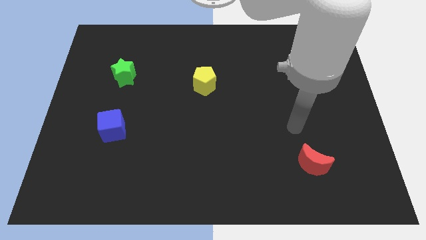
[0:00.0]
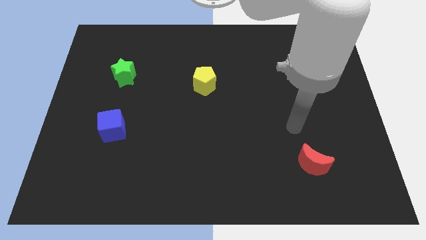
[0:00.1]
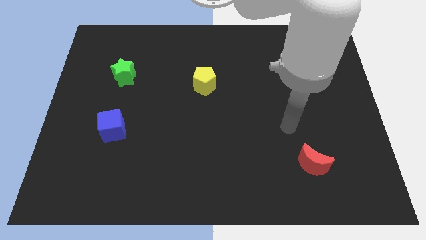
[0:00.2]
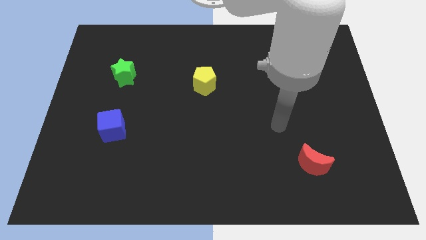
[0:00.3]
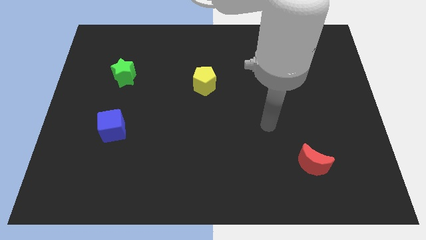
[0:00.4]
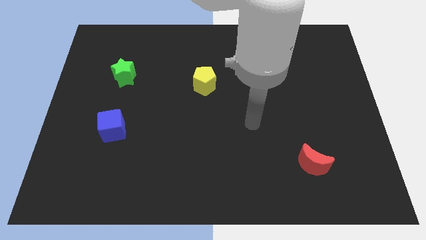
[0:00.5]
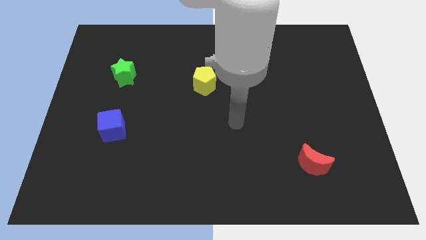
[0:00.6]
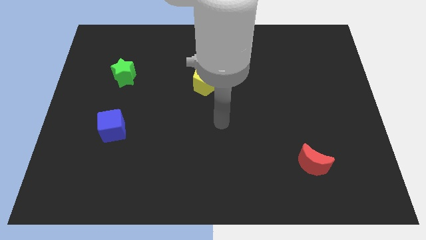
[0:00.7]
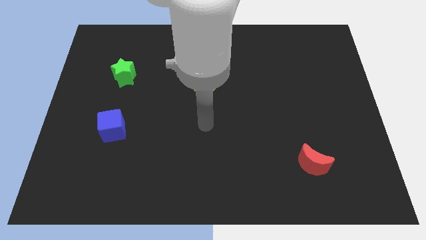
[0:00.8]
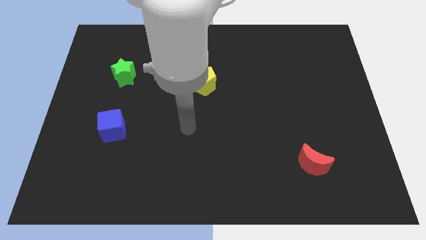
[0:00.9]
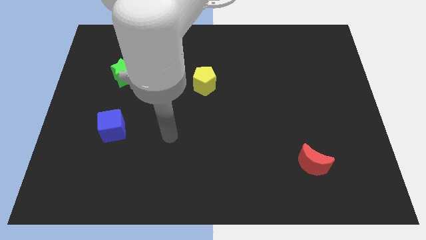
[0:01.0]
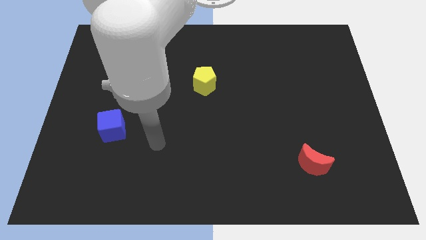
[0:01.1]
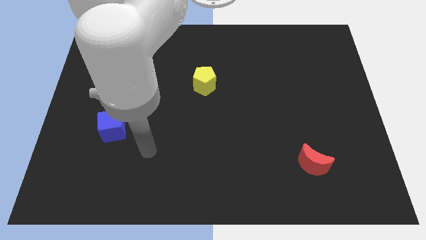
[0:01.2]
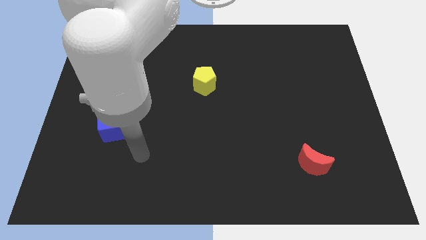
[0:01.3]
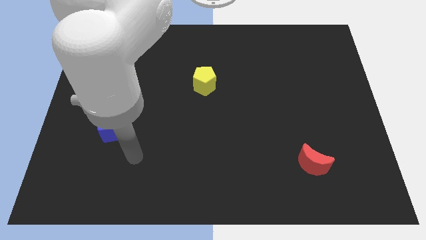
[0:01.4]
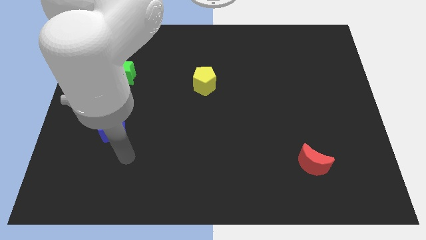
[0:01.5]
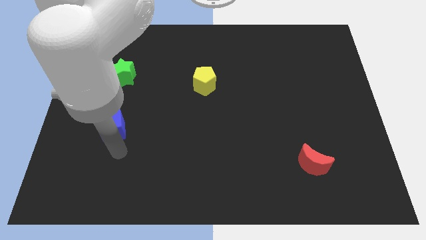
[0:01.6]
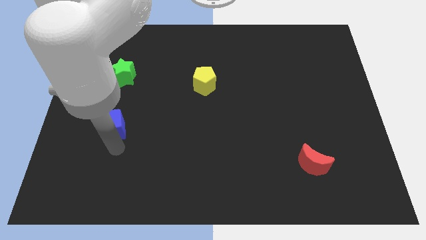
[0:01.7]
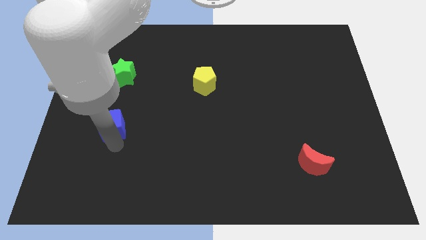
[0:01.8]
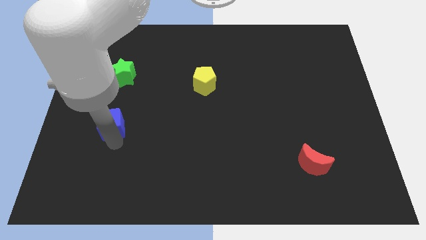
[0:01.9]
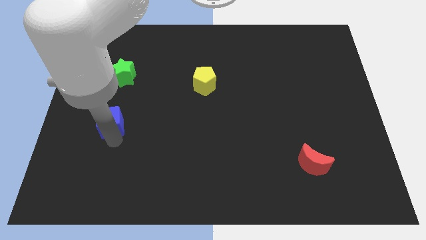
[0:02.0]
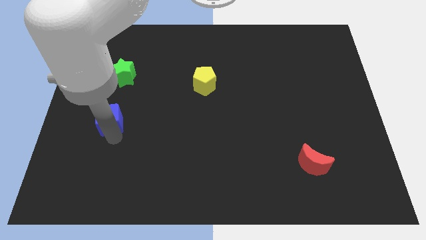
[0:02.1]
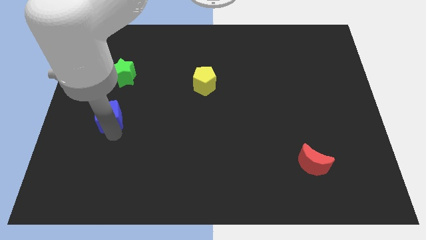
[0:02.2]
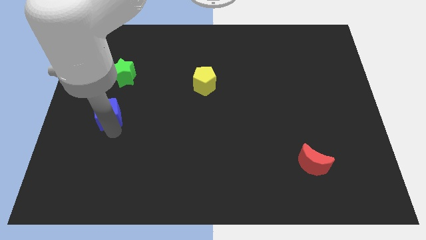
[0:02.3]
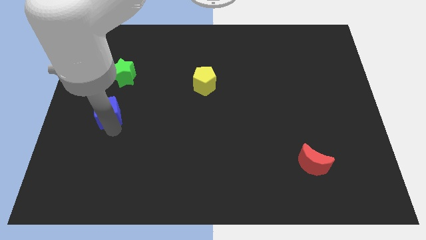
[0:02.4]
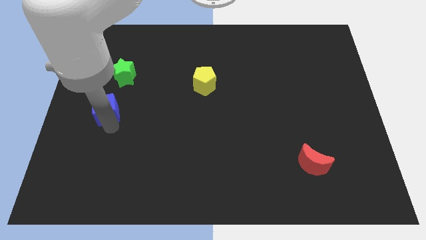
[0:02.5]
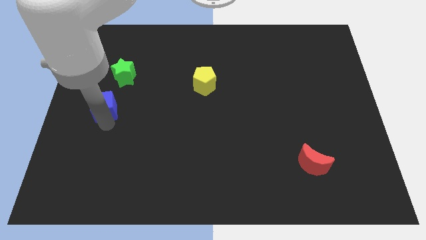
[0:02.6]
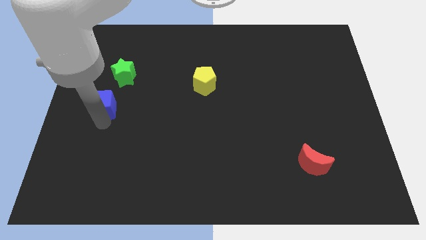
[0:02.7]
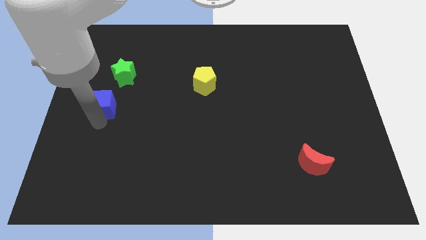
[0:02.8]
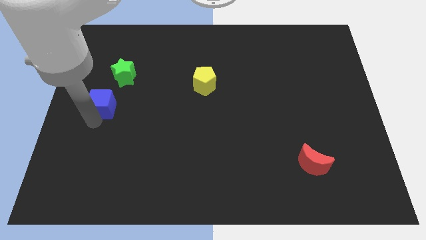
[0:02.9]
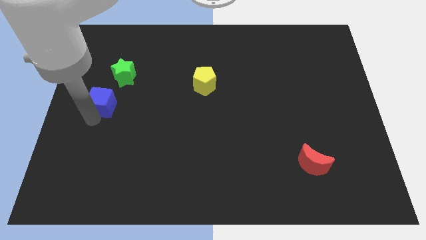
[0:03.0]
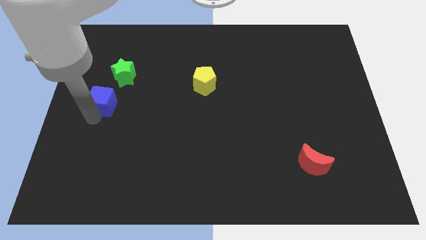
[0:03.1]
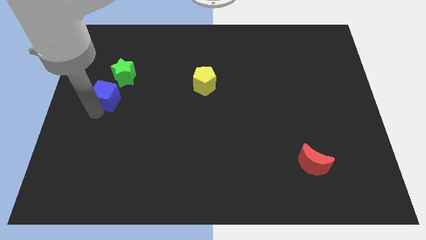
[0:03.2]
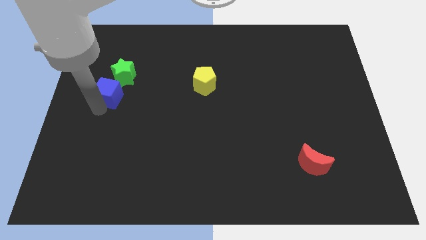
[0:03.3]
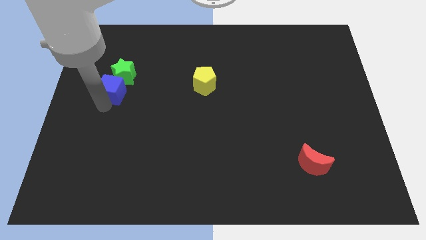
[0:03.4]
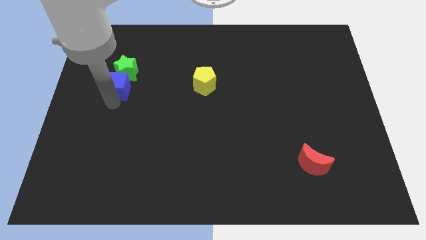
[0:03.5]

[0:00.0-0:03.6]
push the blue block next to the green block

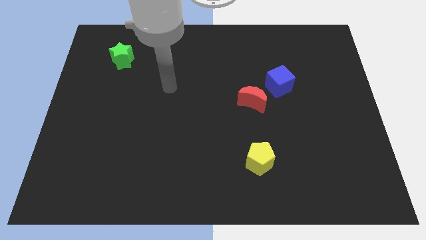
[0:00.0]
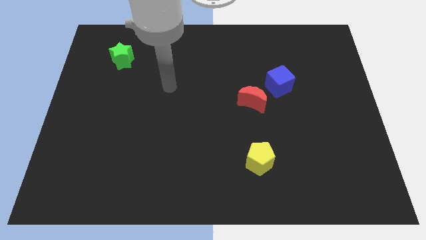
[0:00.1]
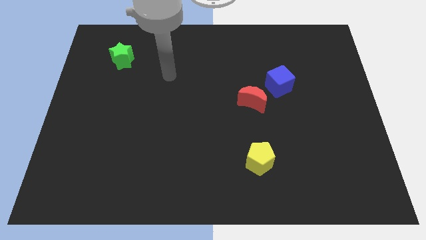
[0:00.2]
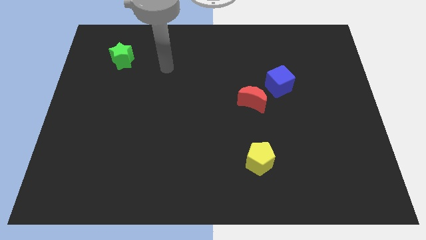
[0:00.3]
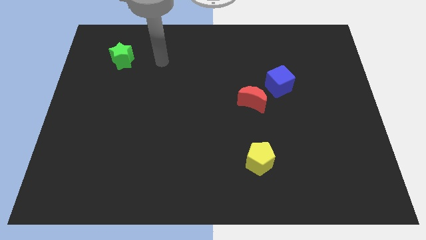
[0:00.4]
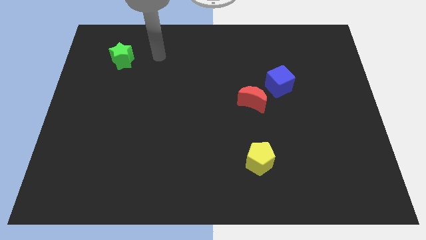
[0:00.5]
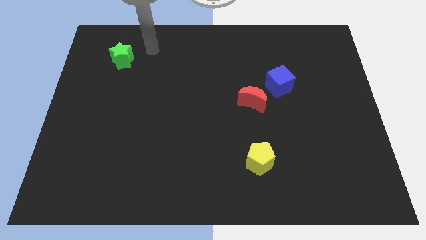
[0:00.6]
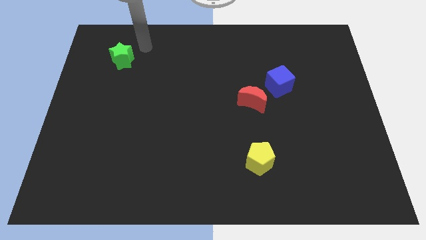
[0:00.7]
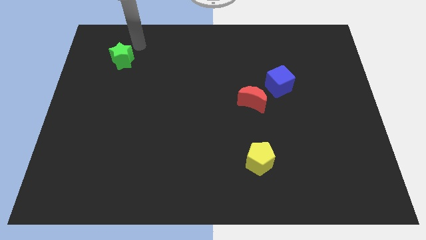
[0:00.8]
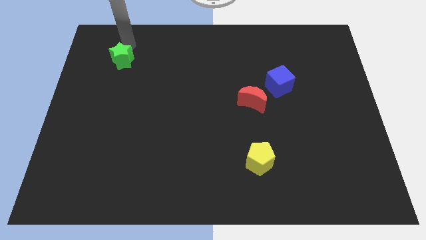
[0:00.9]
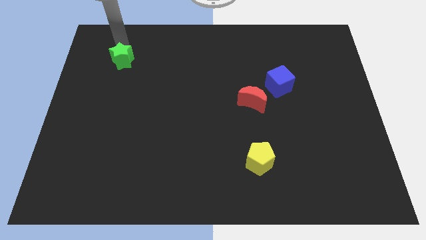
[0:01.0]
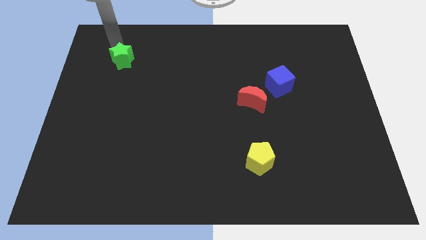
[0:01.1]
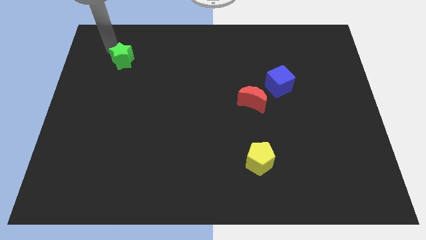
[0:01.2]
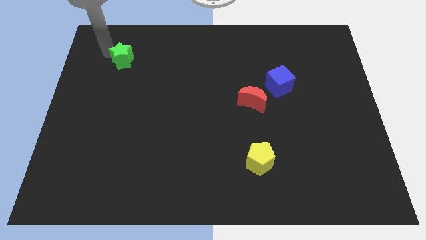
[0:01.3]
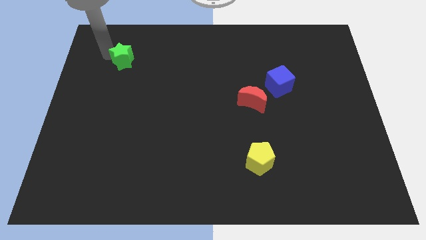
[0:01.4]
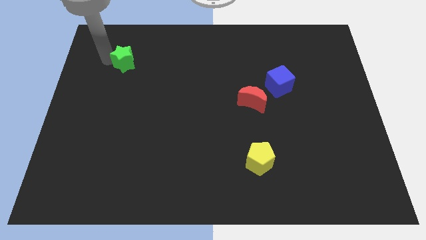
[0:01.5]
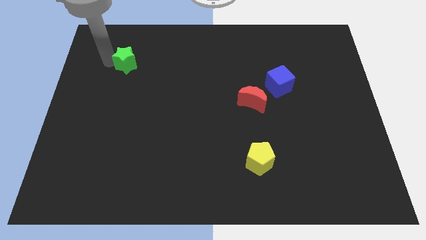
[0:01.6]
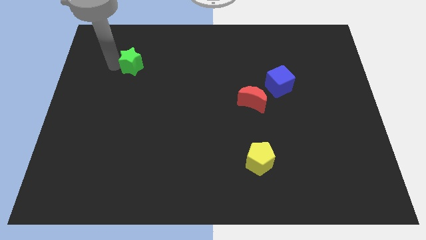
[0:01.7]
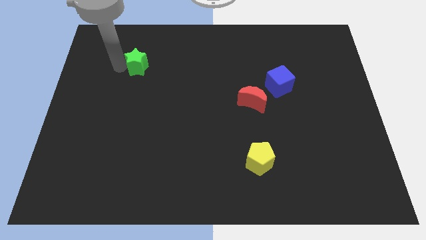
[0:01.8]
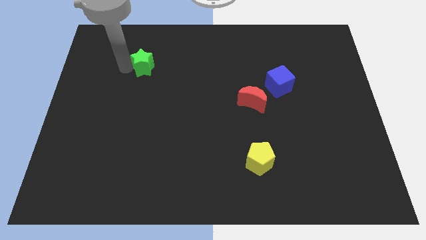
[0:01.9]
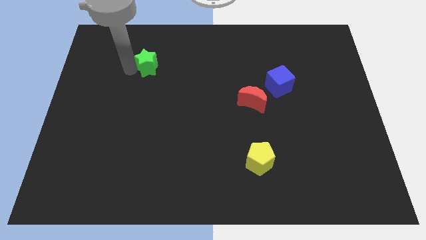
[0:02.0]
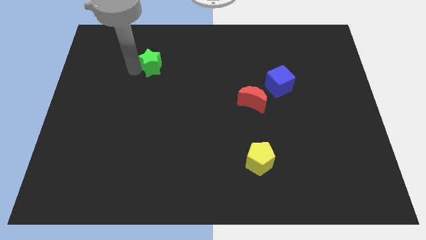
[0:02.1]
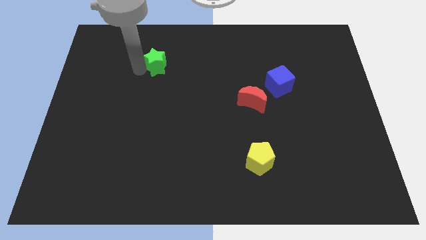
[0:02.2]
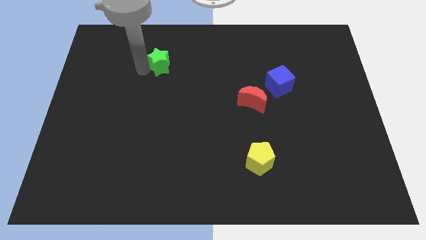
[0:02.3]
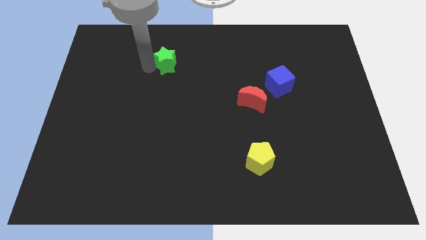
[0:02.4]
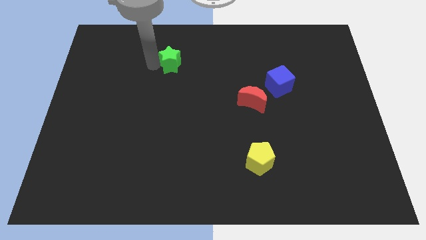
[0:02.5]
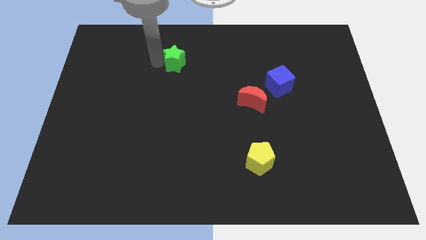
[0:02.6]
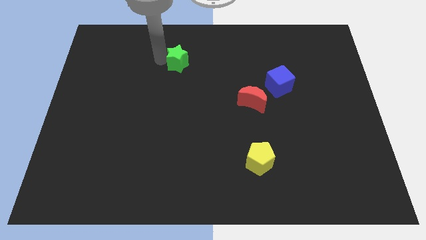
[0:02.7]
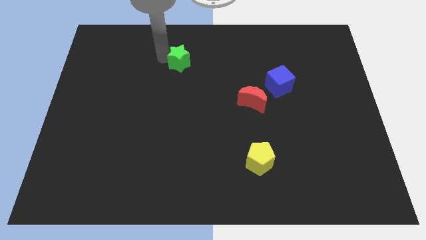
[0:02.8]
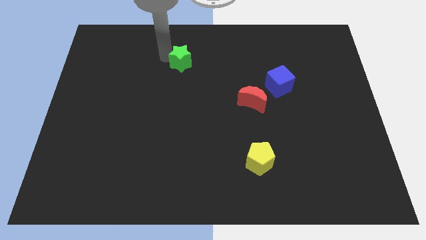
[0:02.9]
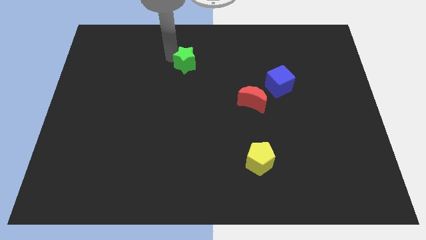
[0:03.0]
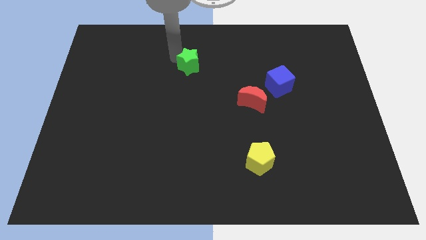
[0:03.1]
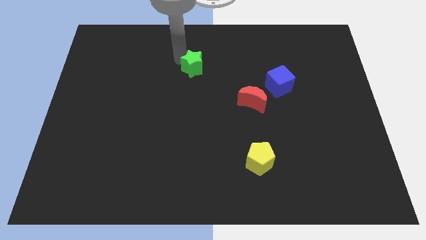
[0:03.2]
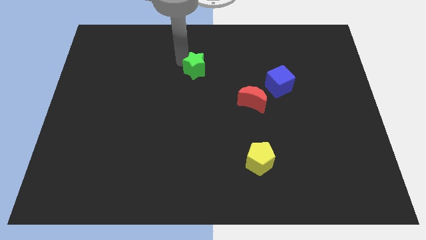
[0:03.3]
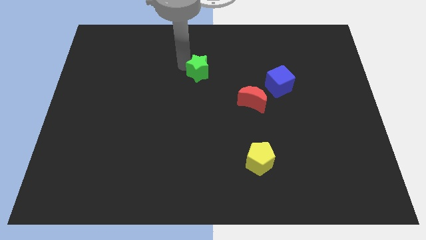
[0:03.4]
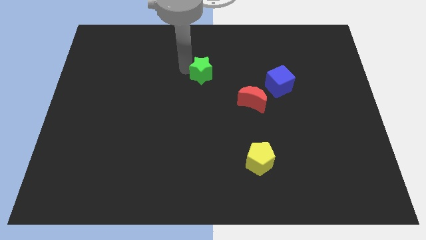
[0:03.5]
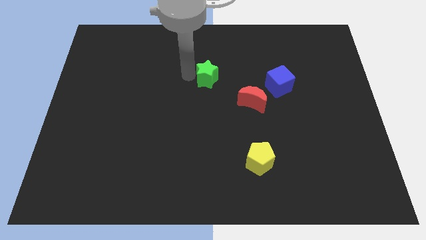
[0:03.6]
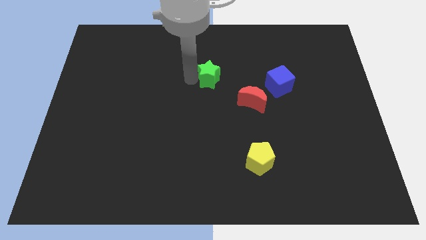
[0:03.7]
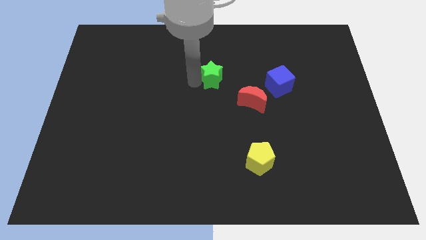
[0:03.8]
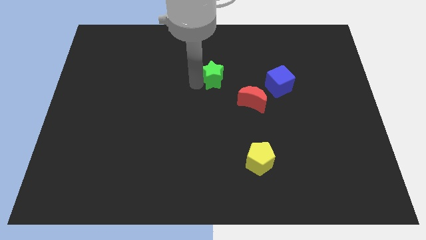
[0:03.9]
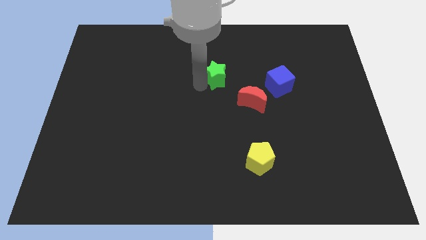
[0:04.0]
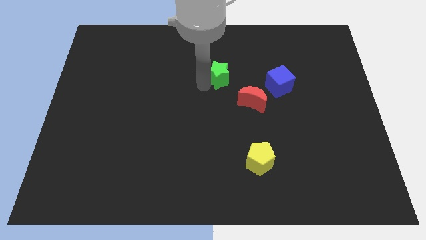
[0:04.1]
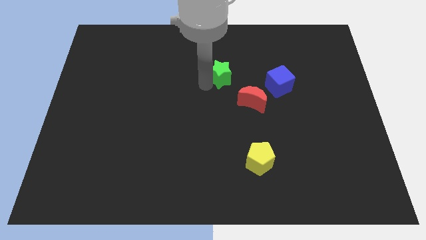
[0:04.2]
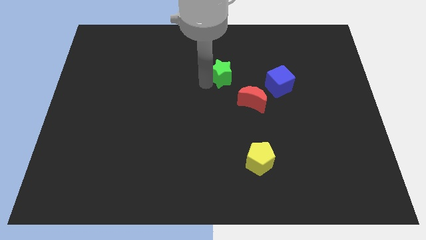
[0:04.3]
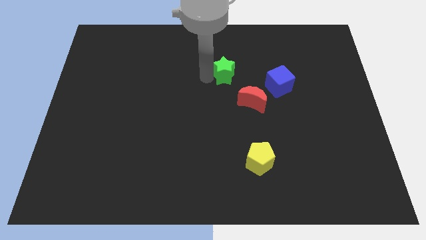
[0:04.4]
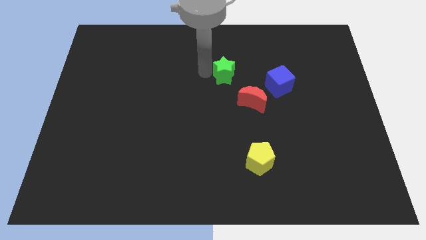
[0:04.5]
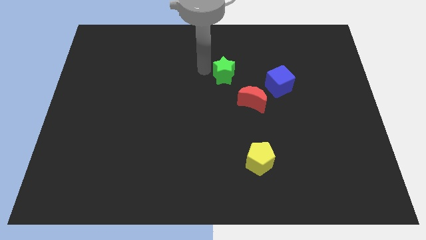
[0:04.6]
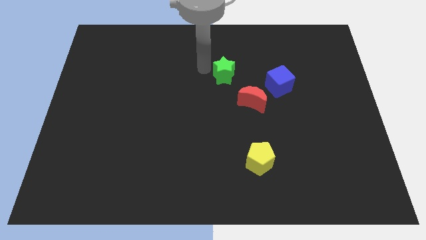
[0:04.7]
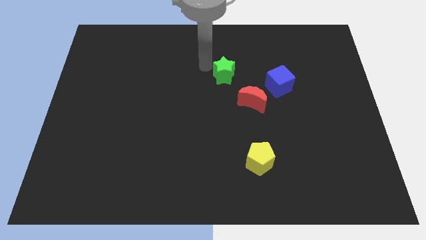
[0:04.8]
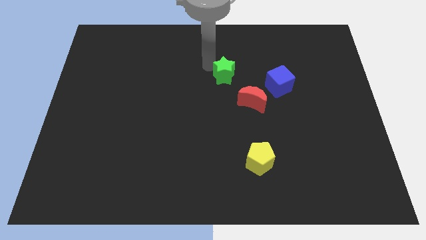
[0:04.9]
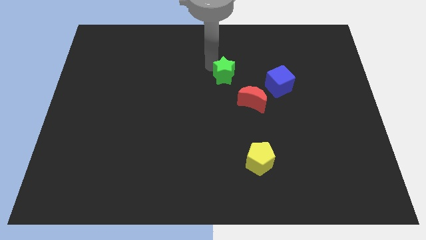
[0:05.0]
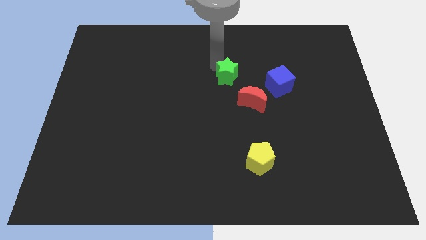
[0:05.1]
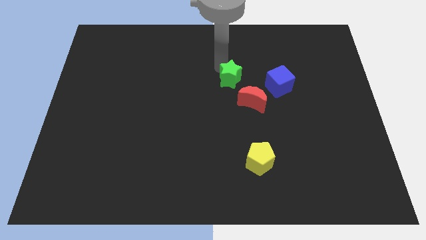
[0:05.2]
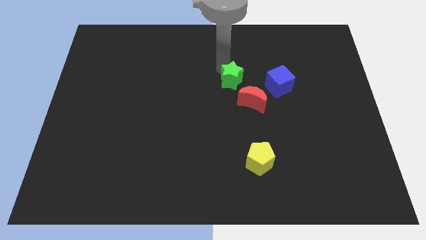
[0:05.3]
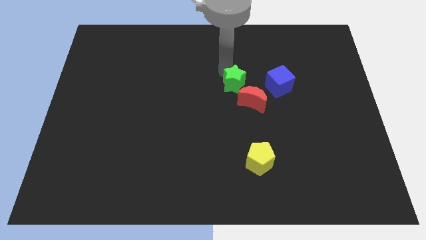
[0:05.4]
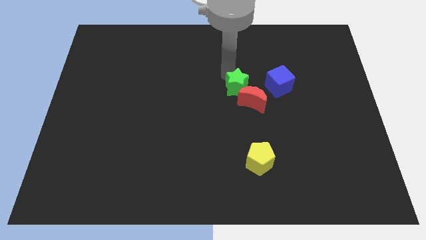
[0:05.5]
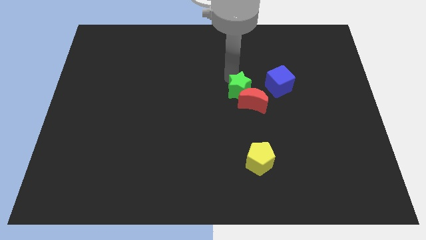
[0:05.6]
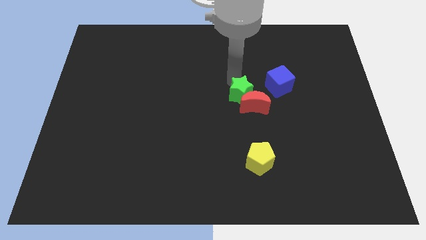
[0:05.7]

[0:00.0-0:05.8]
put the star next to the red moon
